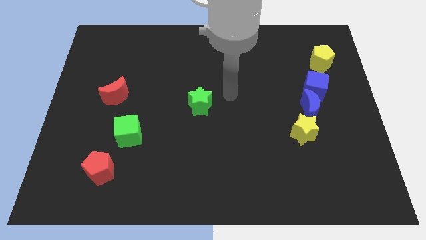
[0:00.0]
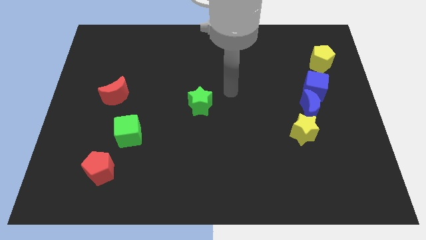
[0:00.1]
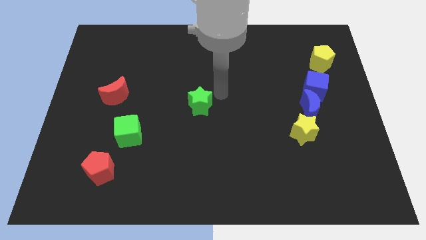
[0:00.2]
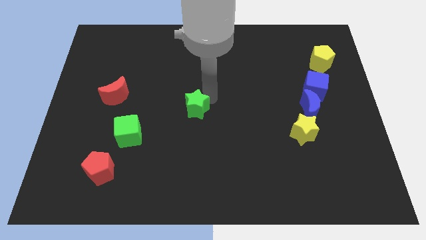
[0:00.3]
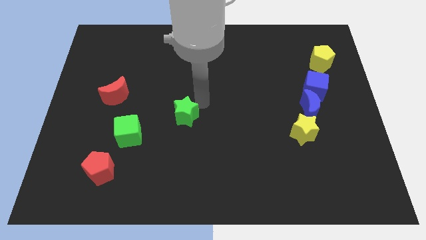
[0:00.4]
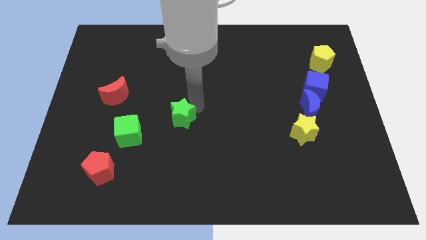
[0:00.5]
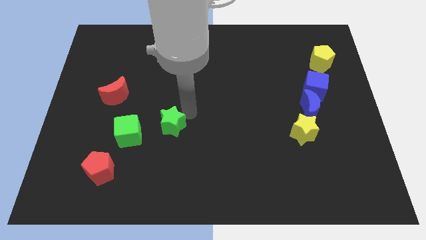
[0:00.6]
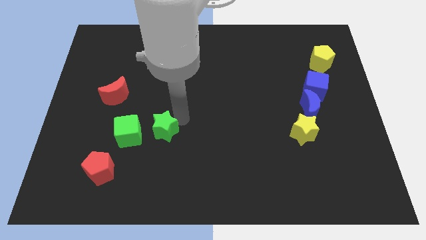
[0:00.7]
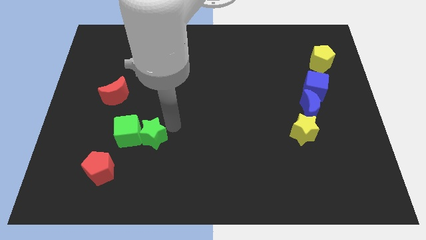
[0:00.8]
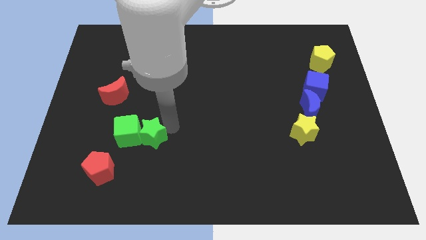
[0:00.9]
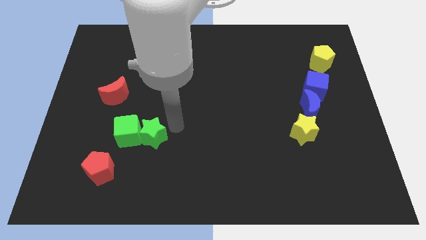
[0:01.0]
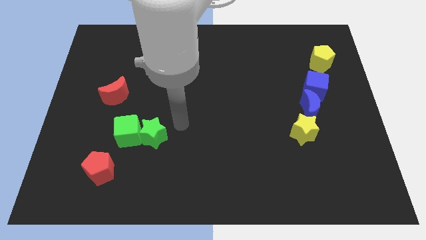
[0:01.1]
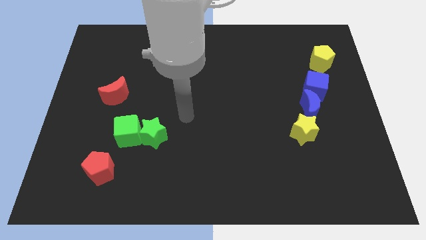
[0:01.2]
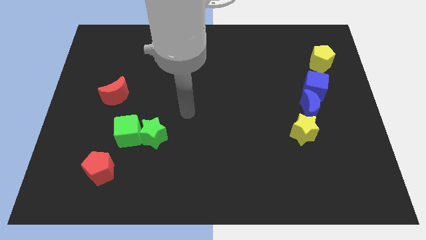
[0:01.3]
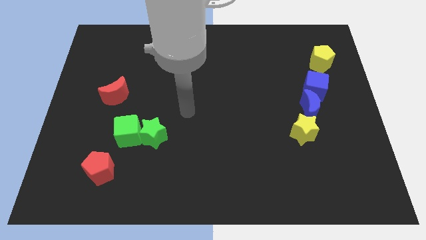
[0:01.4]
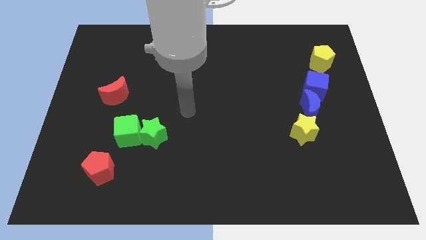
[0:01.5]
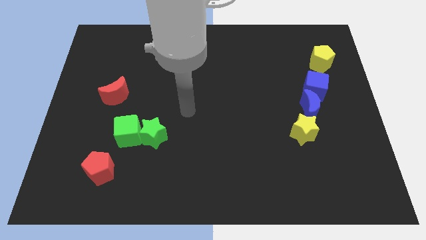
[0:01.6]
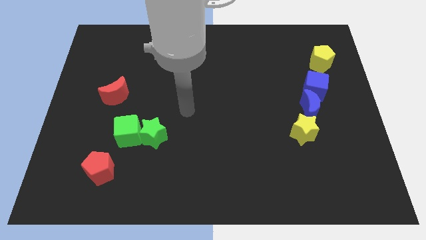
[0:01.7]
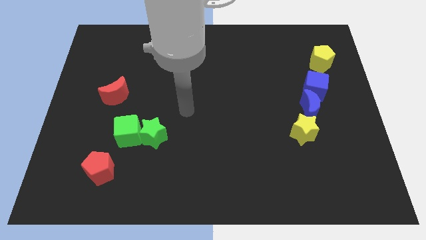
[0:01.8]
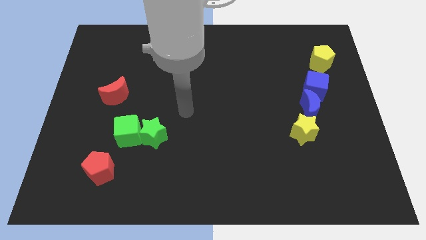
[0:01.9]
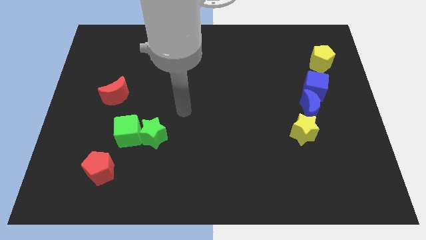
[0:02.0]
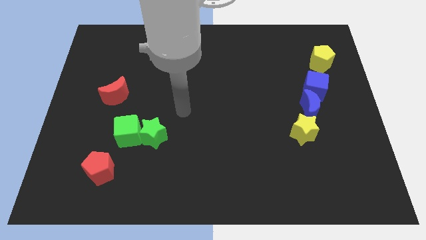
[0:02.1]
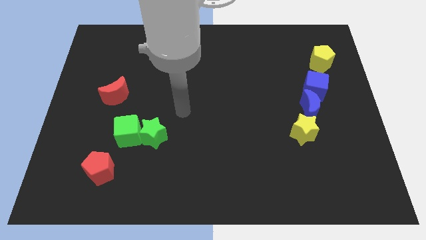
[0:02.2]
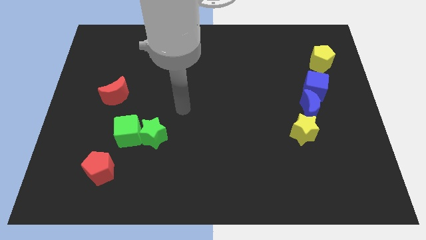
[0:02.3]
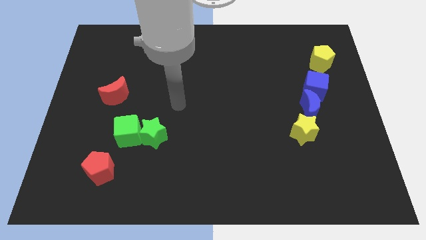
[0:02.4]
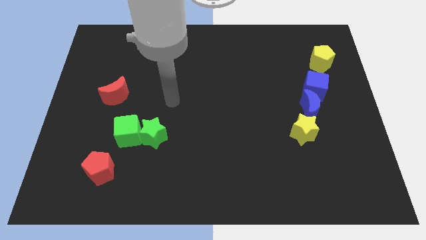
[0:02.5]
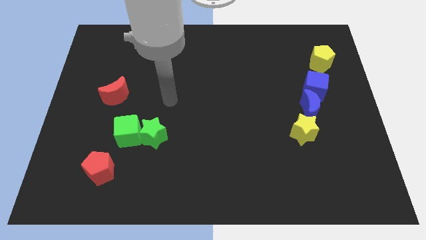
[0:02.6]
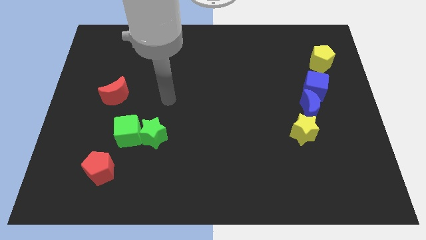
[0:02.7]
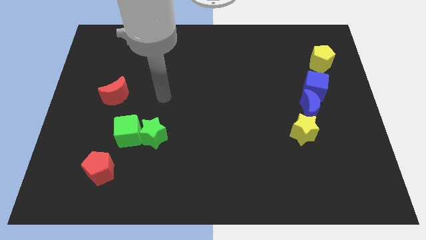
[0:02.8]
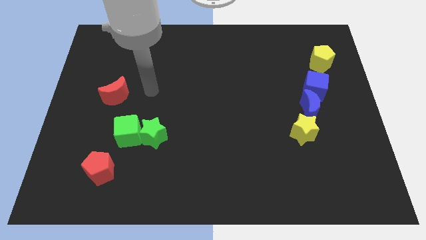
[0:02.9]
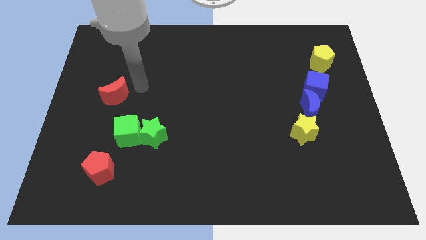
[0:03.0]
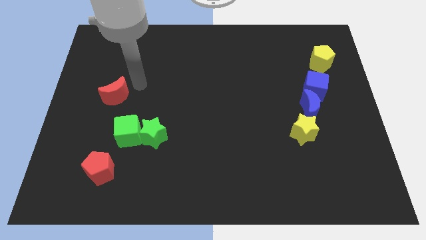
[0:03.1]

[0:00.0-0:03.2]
move the star right beside the green cube

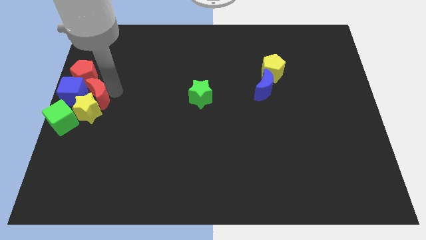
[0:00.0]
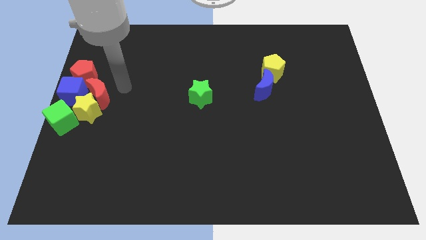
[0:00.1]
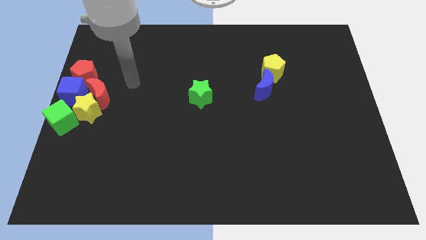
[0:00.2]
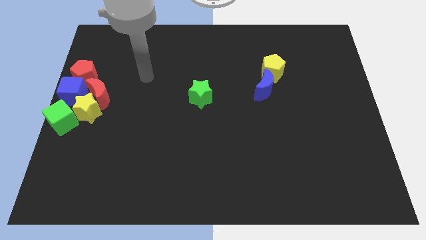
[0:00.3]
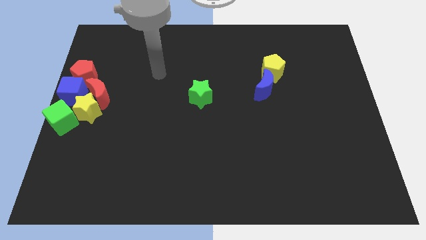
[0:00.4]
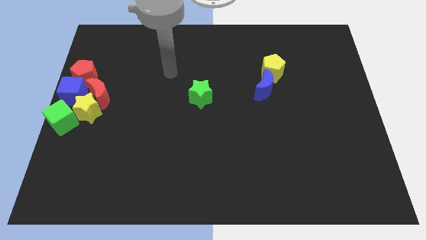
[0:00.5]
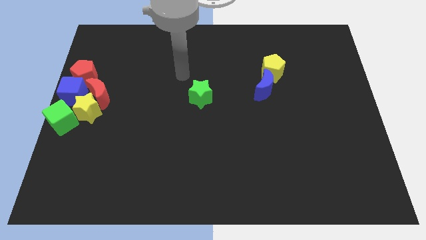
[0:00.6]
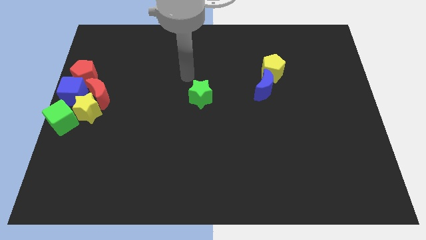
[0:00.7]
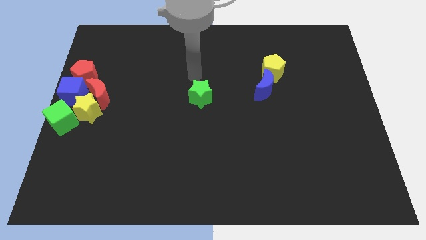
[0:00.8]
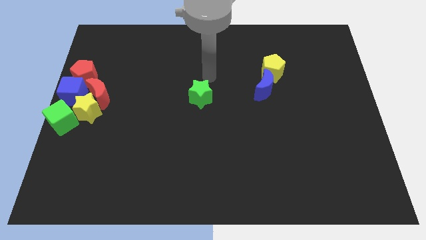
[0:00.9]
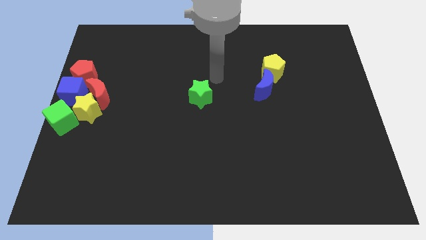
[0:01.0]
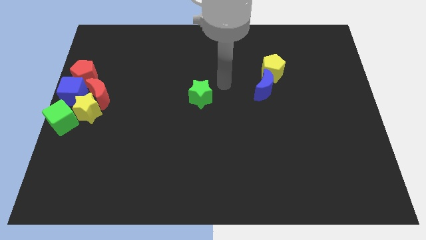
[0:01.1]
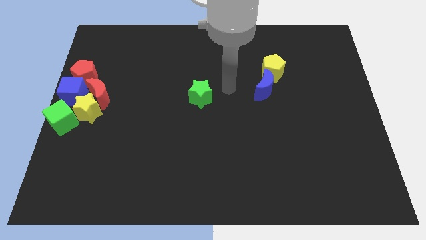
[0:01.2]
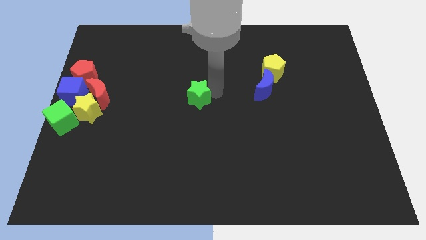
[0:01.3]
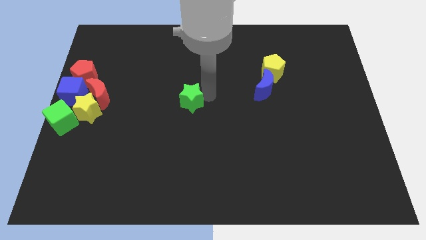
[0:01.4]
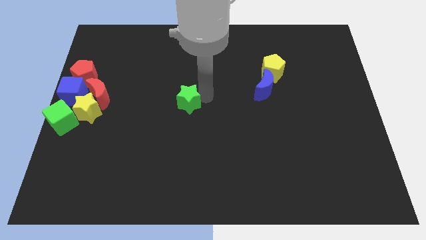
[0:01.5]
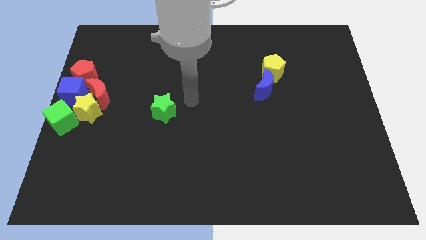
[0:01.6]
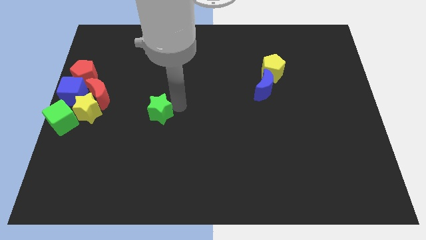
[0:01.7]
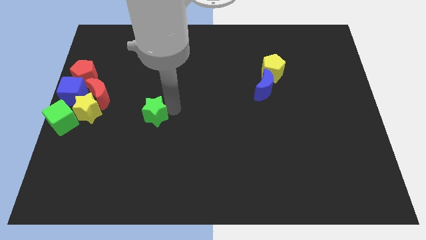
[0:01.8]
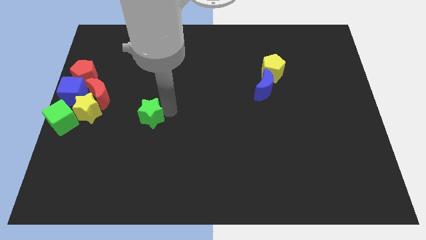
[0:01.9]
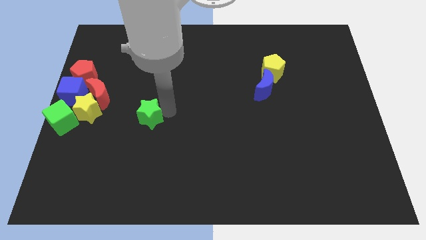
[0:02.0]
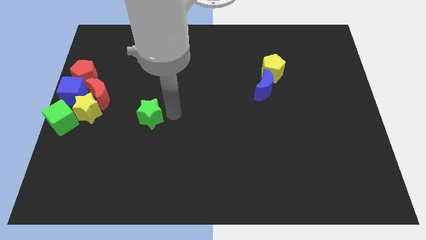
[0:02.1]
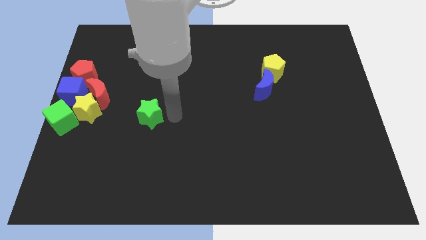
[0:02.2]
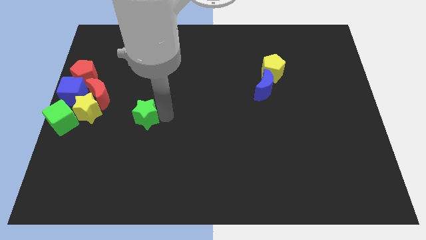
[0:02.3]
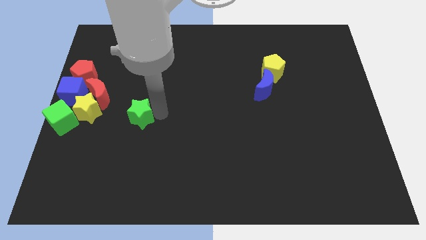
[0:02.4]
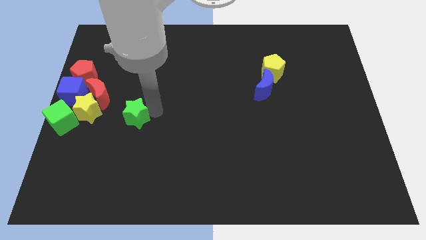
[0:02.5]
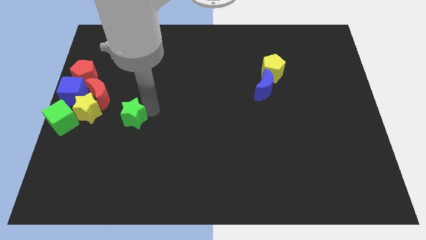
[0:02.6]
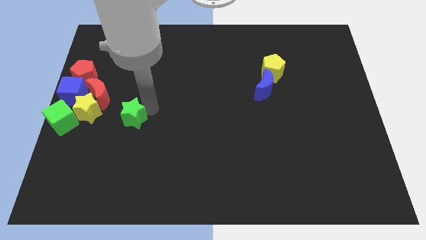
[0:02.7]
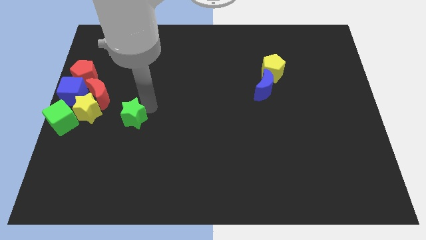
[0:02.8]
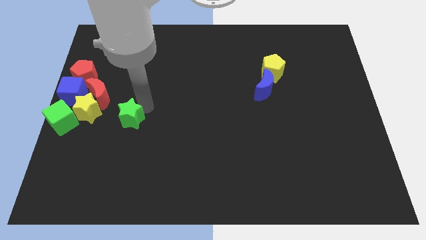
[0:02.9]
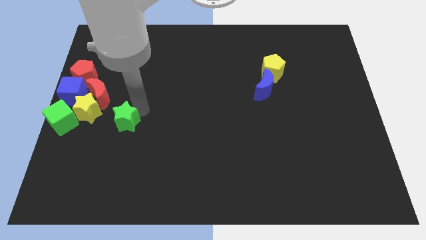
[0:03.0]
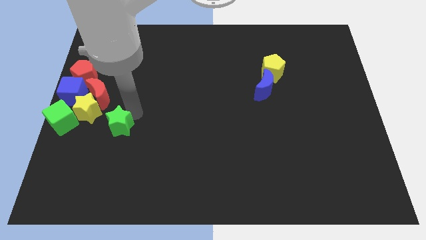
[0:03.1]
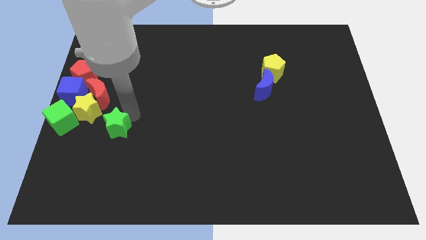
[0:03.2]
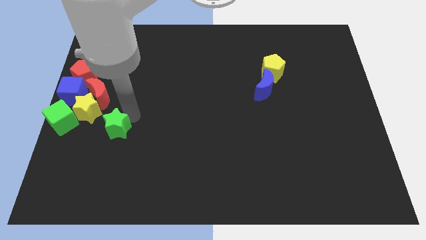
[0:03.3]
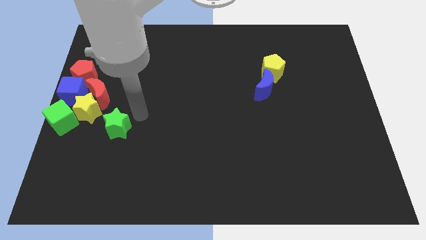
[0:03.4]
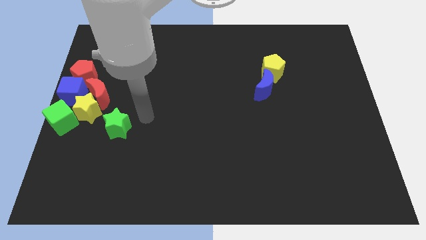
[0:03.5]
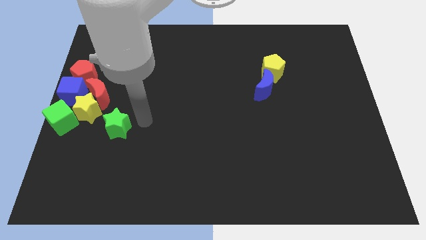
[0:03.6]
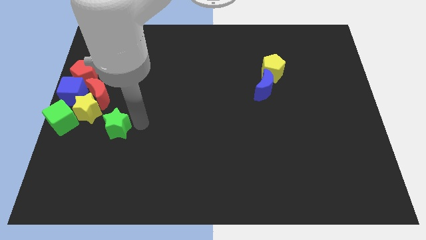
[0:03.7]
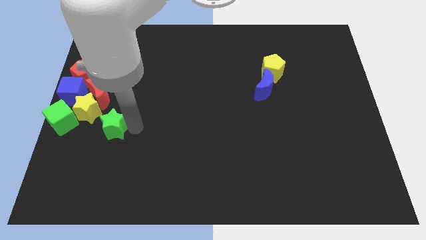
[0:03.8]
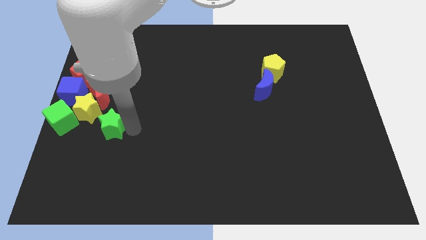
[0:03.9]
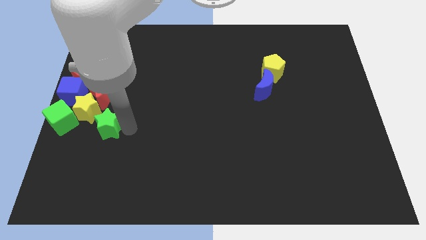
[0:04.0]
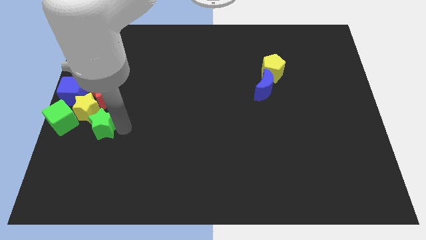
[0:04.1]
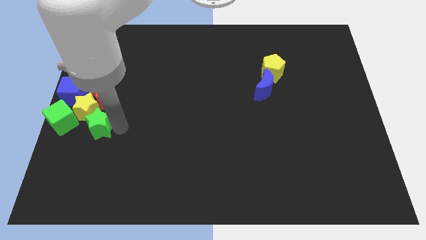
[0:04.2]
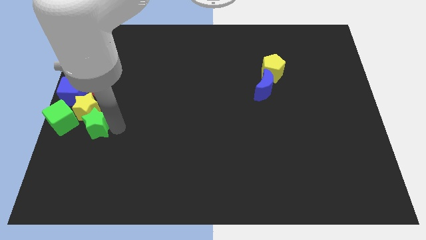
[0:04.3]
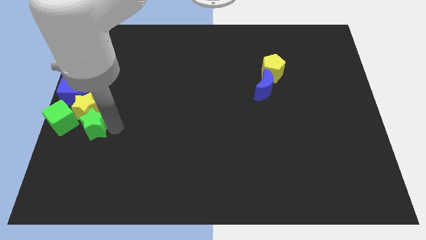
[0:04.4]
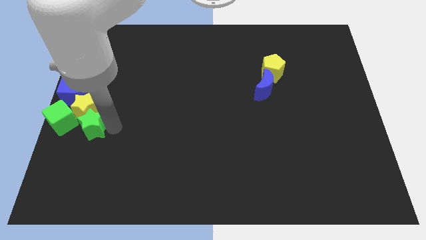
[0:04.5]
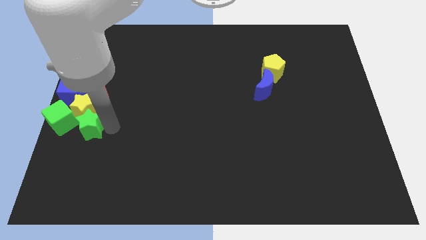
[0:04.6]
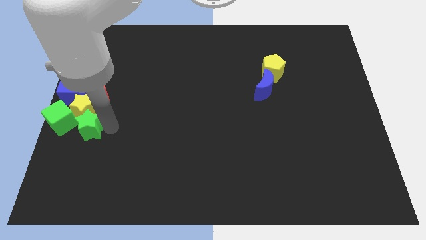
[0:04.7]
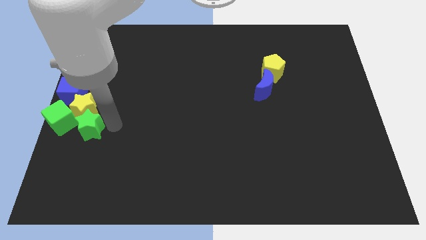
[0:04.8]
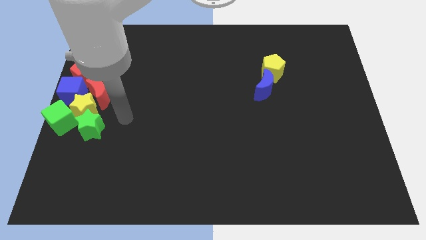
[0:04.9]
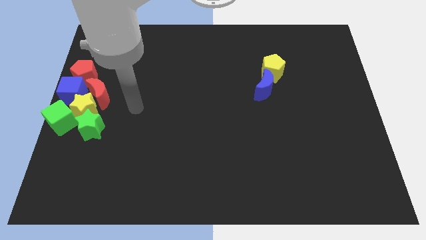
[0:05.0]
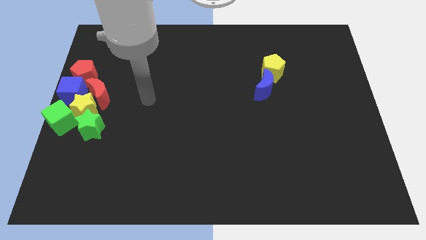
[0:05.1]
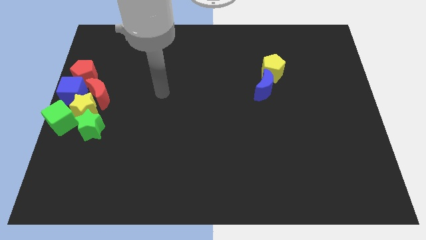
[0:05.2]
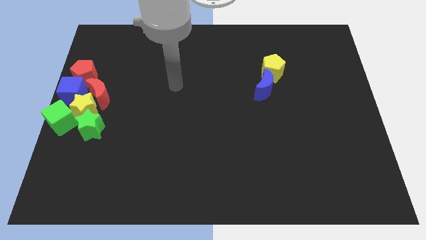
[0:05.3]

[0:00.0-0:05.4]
push the green star into the yellow star

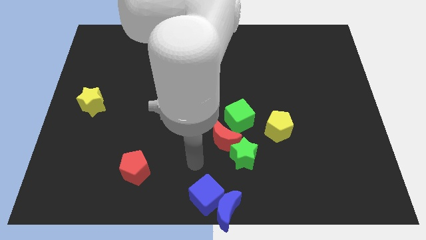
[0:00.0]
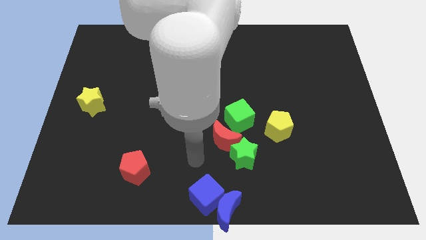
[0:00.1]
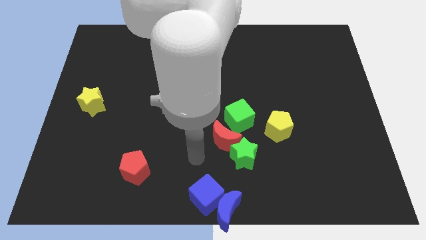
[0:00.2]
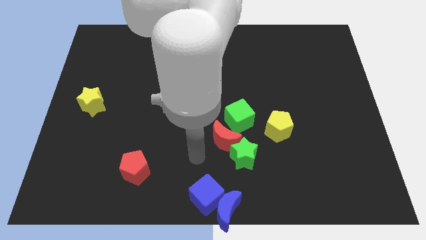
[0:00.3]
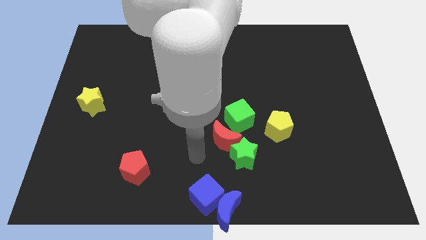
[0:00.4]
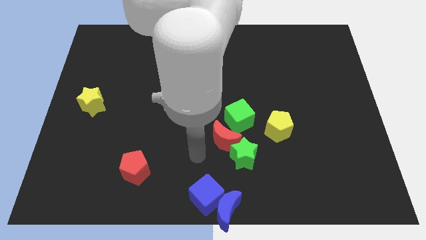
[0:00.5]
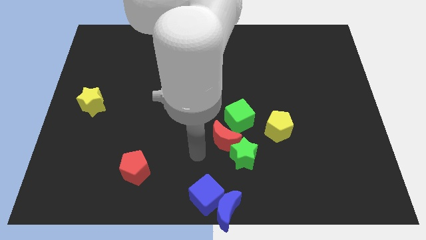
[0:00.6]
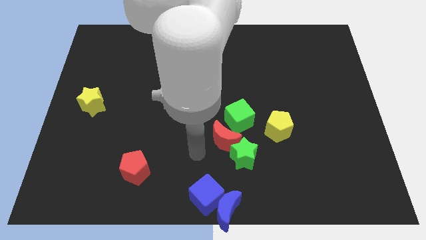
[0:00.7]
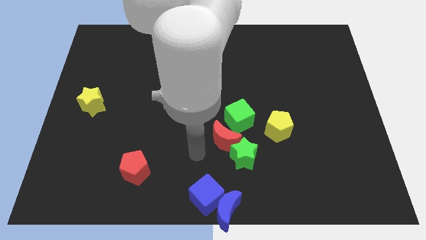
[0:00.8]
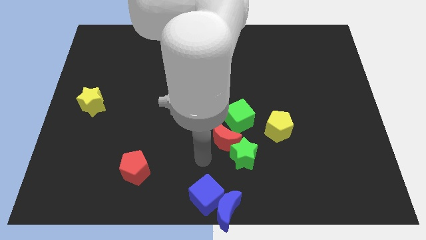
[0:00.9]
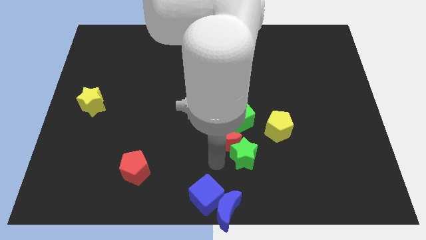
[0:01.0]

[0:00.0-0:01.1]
move your arm away from blue cube
